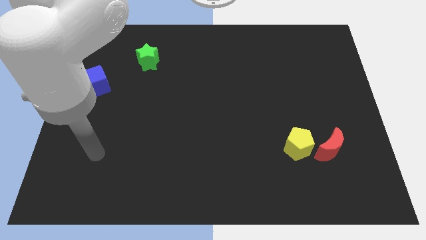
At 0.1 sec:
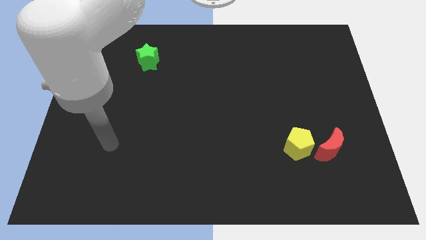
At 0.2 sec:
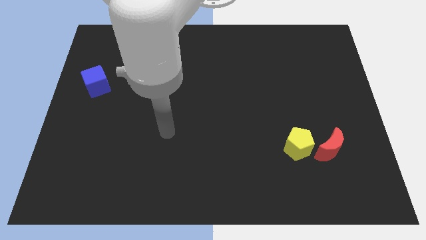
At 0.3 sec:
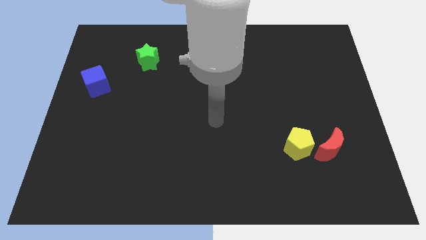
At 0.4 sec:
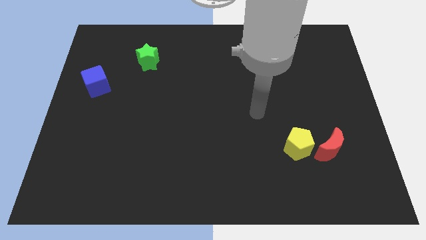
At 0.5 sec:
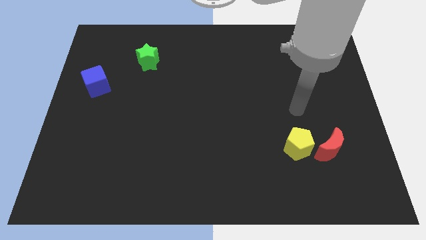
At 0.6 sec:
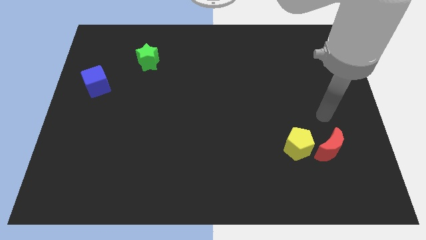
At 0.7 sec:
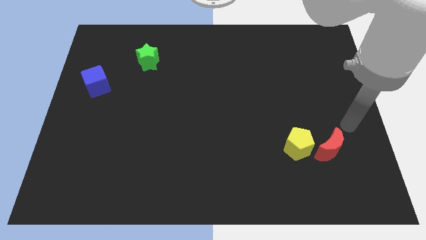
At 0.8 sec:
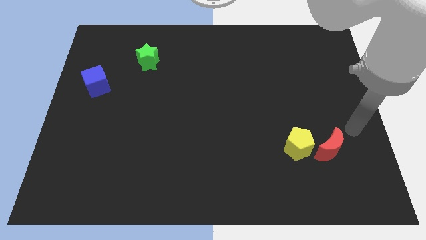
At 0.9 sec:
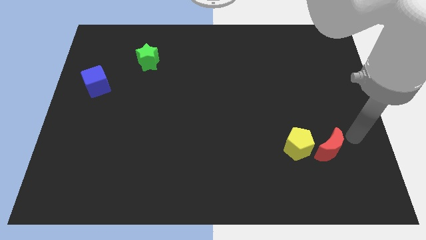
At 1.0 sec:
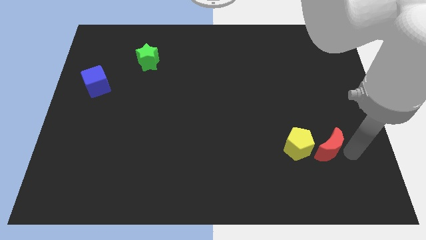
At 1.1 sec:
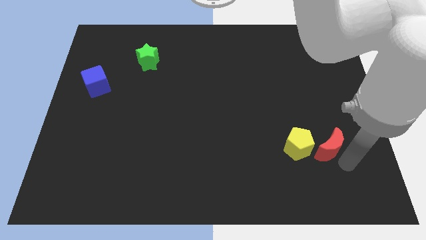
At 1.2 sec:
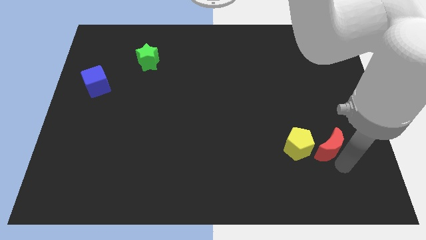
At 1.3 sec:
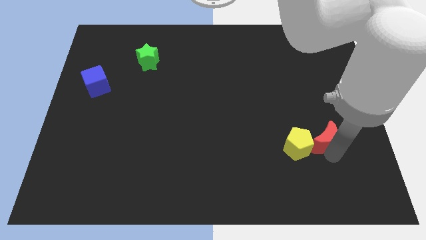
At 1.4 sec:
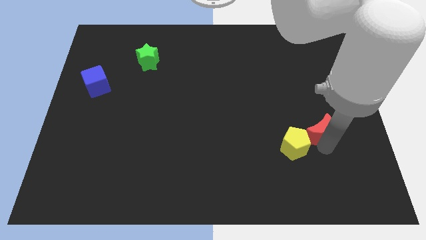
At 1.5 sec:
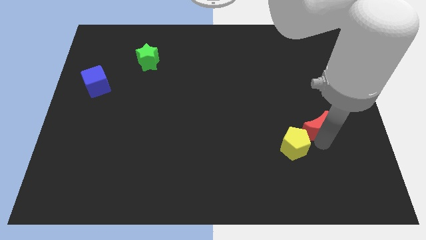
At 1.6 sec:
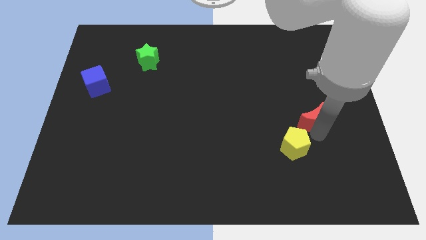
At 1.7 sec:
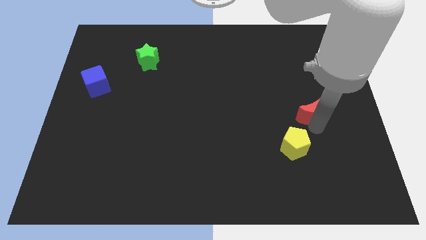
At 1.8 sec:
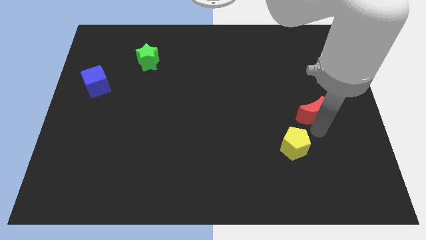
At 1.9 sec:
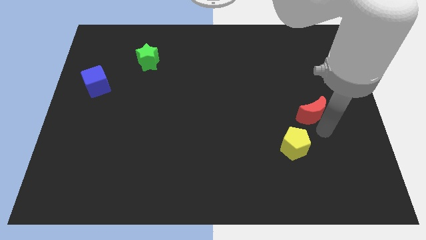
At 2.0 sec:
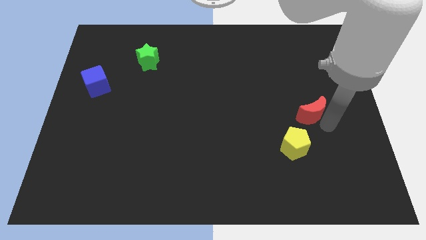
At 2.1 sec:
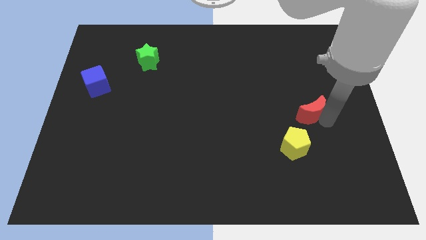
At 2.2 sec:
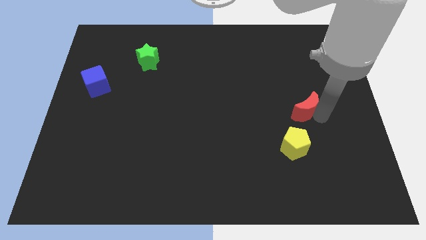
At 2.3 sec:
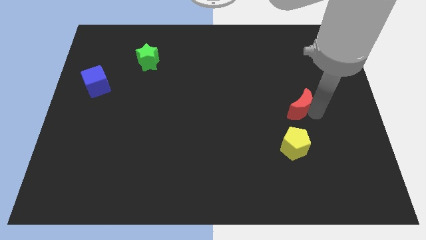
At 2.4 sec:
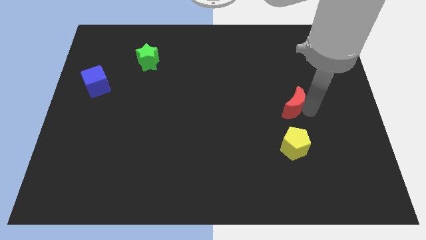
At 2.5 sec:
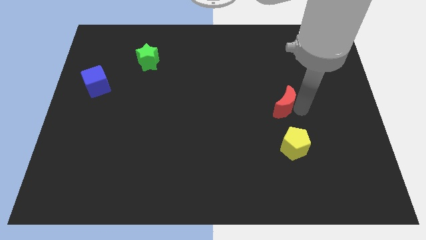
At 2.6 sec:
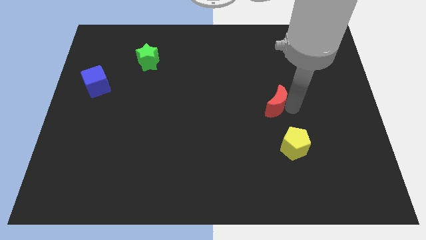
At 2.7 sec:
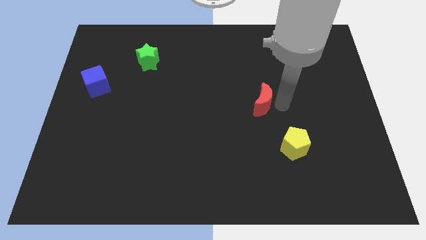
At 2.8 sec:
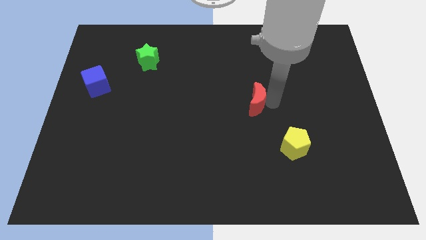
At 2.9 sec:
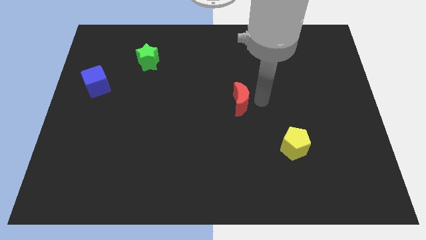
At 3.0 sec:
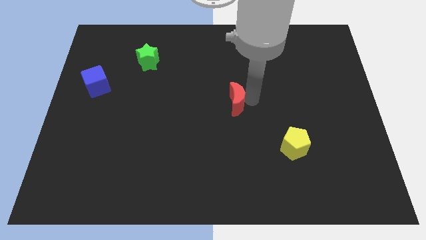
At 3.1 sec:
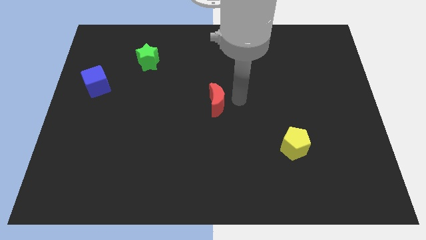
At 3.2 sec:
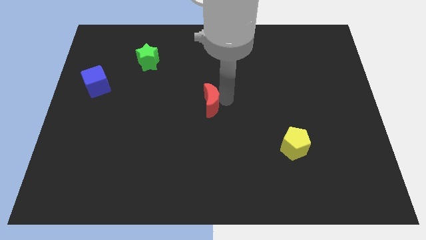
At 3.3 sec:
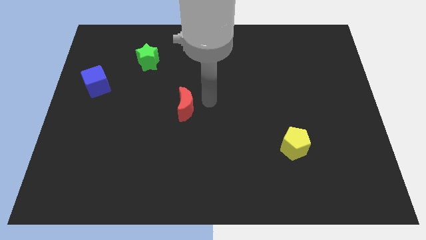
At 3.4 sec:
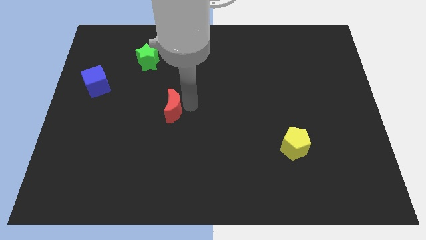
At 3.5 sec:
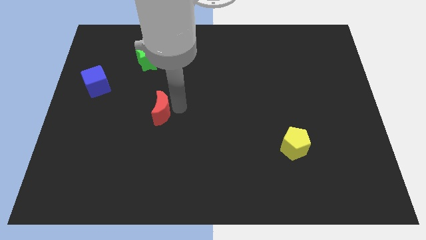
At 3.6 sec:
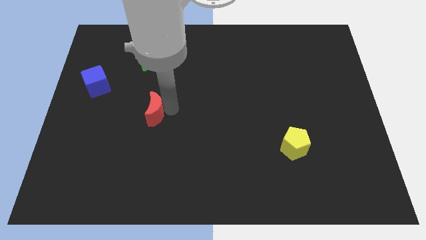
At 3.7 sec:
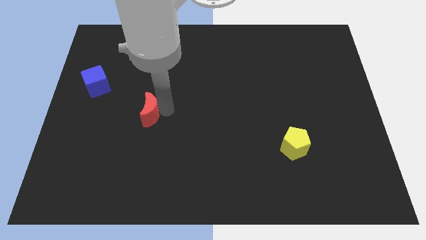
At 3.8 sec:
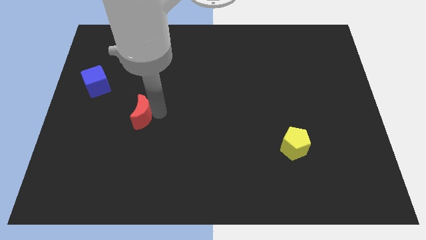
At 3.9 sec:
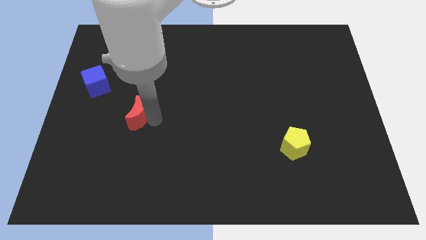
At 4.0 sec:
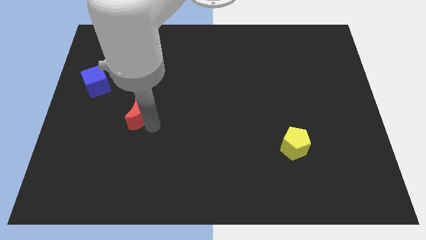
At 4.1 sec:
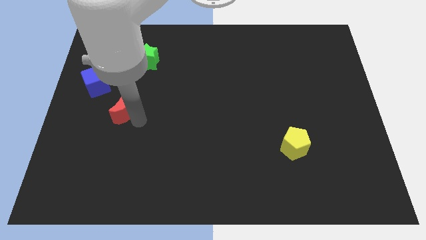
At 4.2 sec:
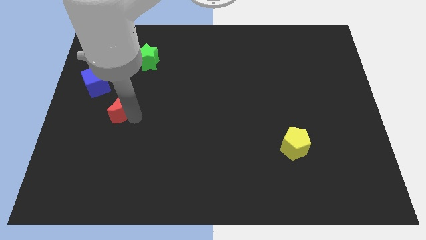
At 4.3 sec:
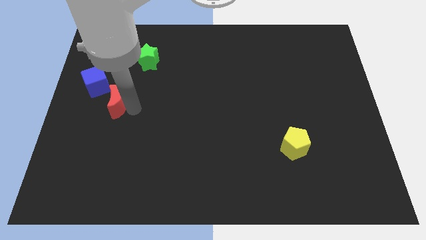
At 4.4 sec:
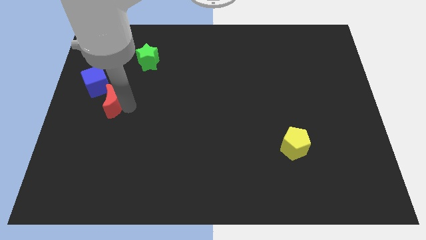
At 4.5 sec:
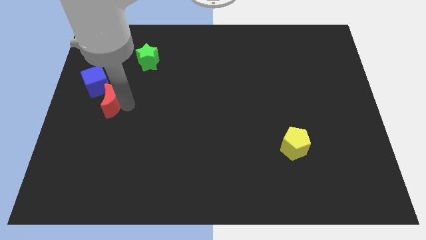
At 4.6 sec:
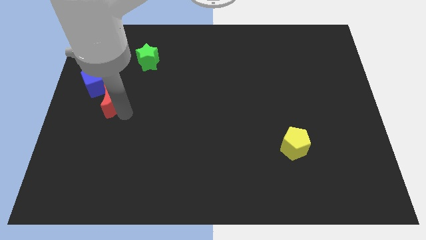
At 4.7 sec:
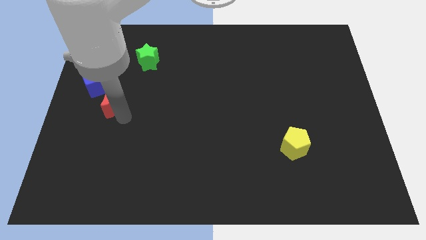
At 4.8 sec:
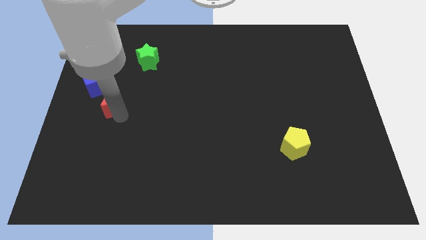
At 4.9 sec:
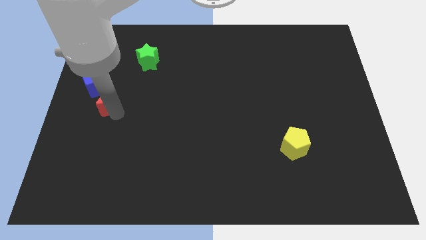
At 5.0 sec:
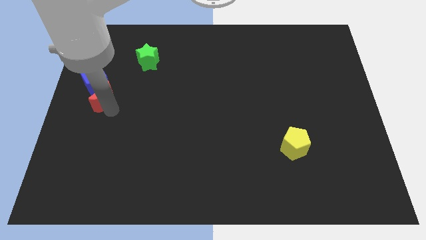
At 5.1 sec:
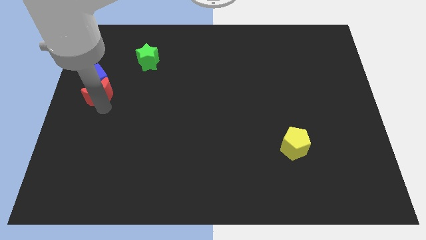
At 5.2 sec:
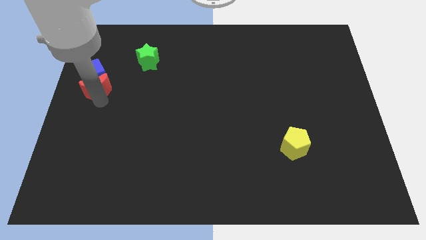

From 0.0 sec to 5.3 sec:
slide the red moon towards the cube

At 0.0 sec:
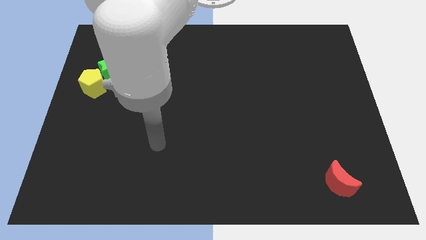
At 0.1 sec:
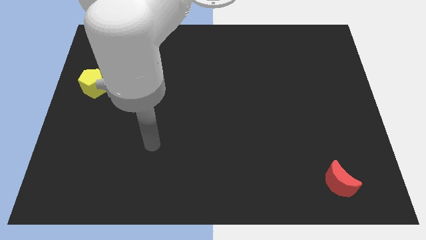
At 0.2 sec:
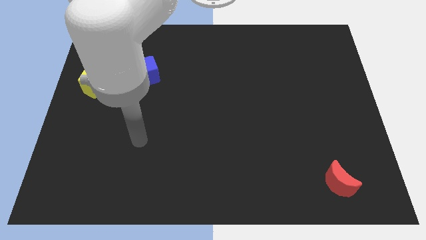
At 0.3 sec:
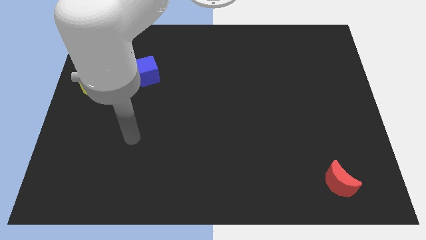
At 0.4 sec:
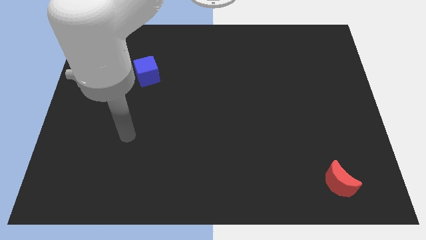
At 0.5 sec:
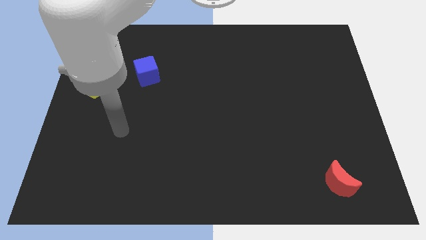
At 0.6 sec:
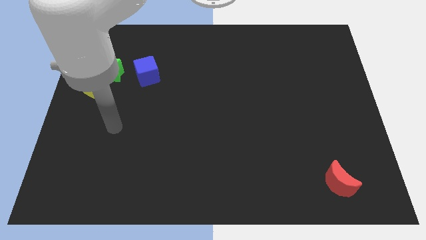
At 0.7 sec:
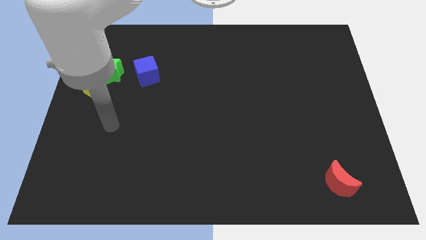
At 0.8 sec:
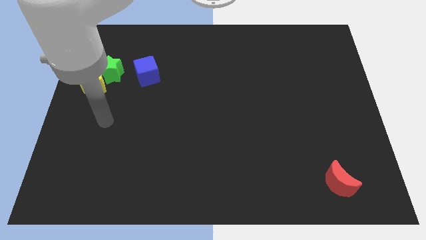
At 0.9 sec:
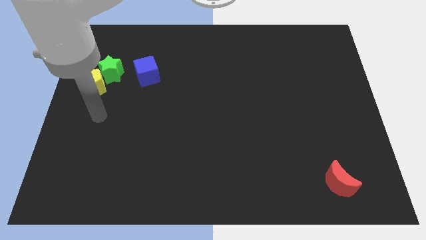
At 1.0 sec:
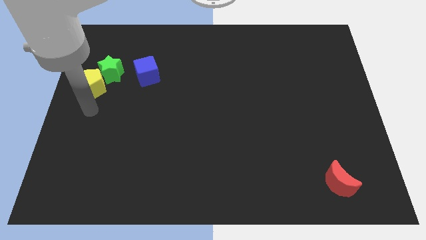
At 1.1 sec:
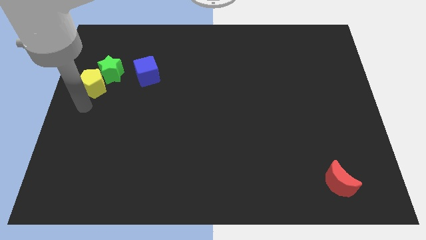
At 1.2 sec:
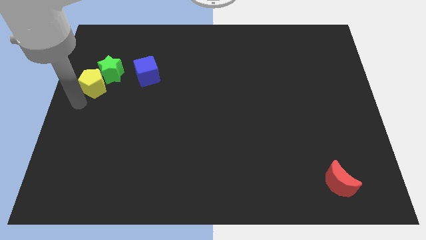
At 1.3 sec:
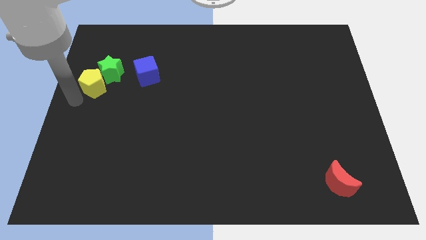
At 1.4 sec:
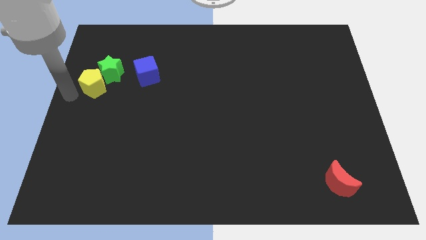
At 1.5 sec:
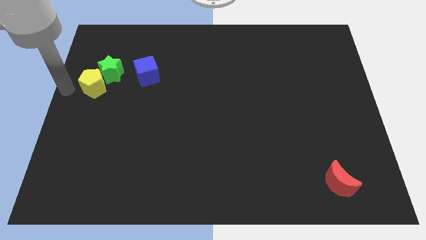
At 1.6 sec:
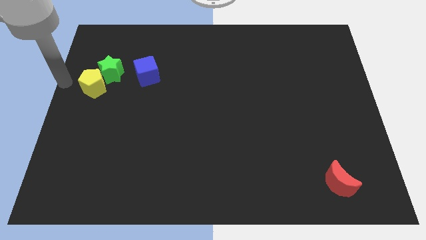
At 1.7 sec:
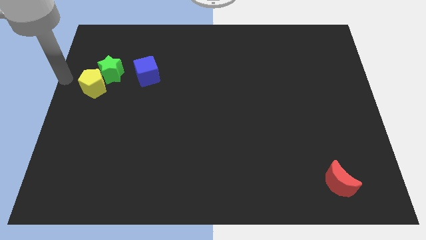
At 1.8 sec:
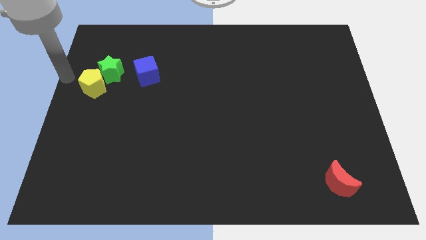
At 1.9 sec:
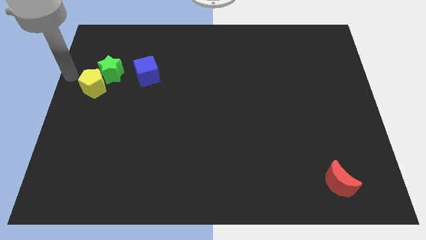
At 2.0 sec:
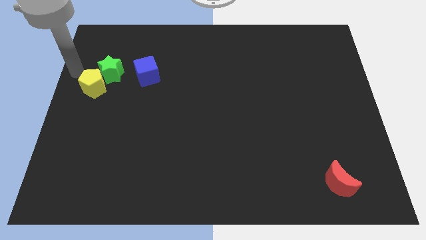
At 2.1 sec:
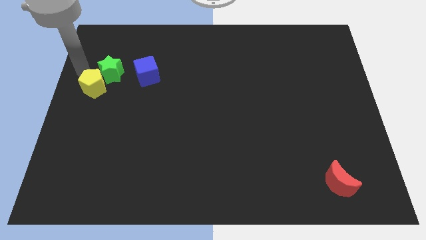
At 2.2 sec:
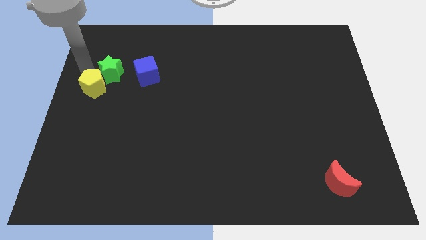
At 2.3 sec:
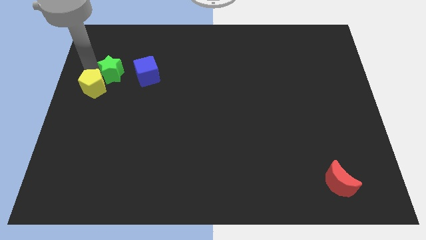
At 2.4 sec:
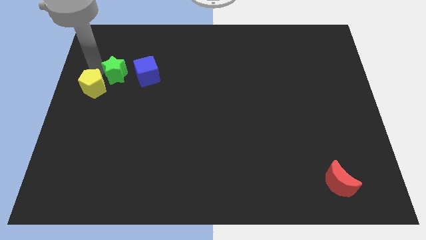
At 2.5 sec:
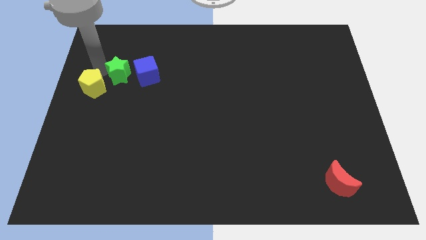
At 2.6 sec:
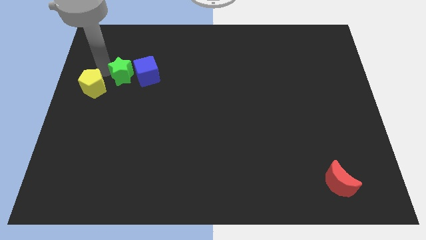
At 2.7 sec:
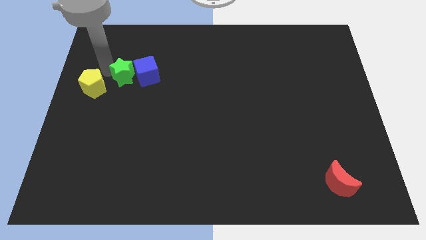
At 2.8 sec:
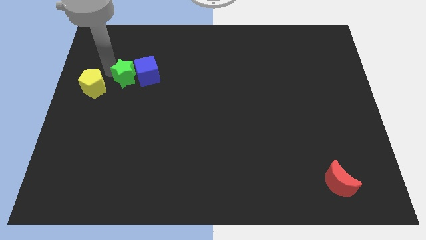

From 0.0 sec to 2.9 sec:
move the star towards the blue cube
